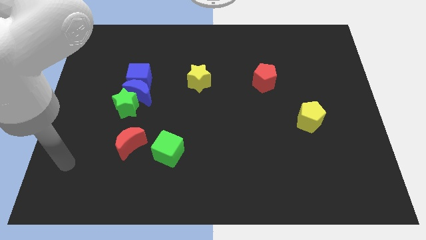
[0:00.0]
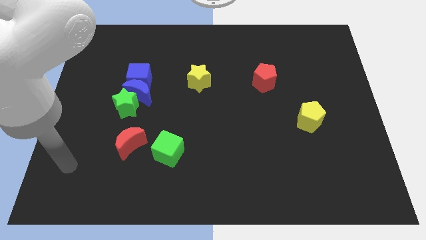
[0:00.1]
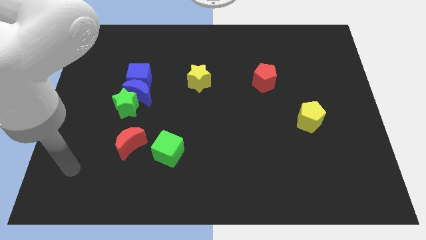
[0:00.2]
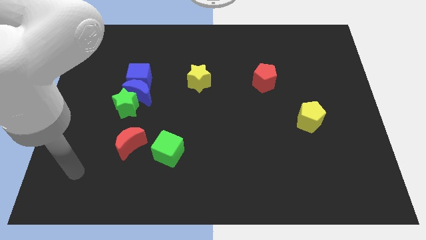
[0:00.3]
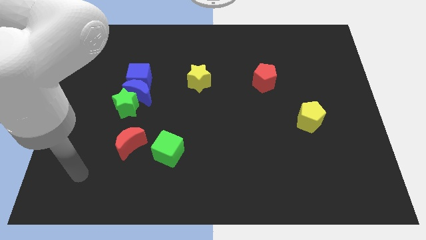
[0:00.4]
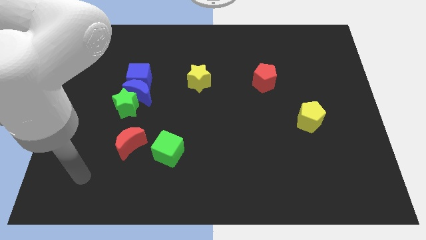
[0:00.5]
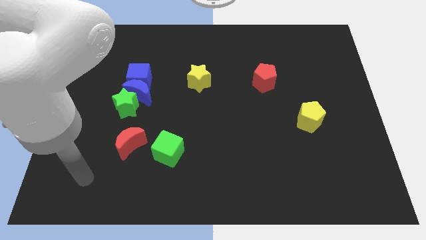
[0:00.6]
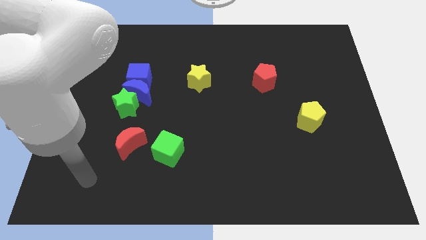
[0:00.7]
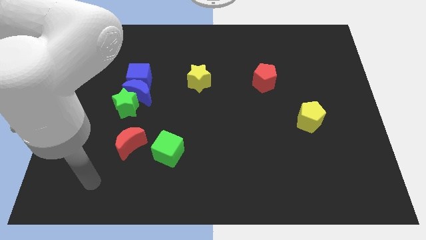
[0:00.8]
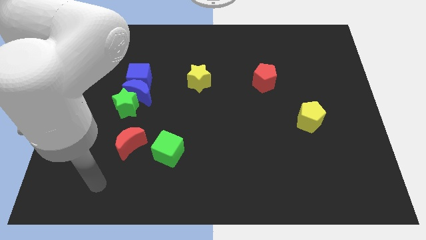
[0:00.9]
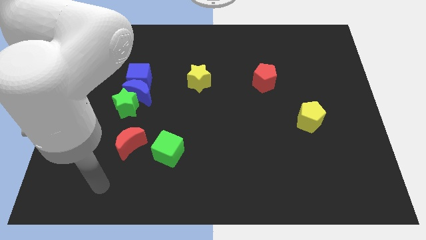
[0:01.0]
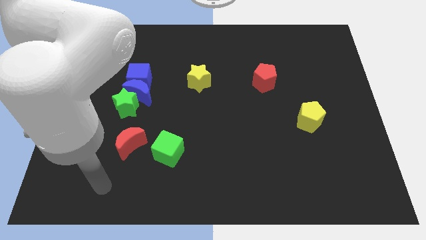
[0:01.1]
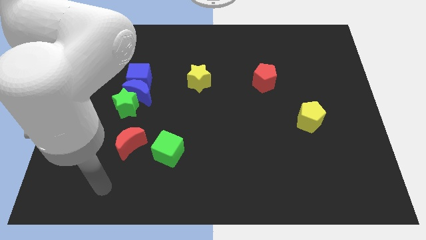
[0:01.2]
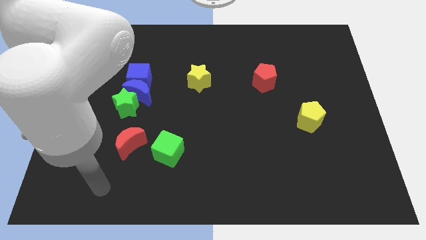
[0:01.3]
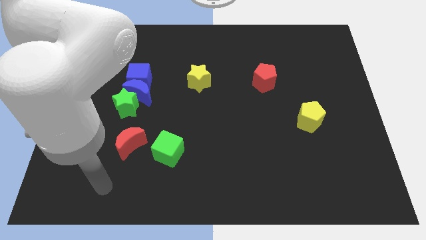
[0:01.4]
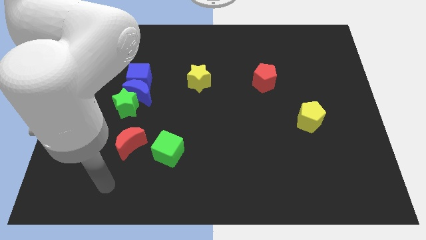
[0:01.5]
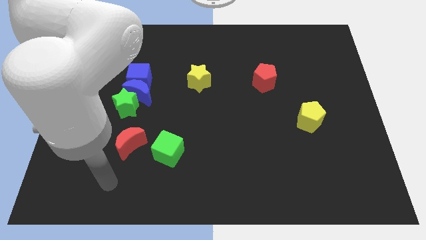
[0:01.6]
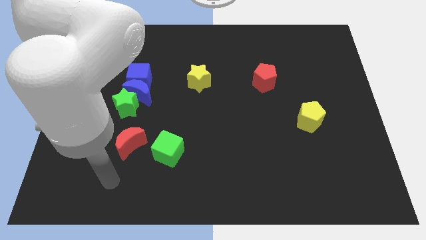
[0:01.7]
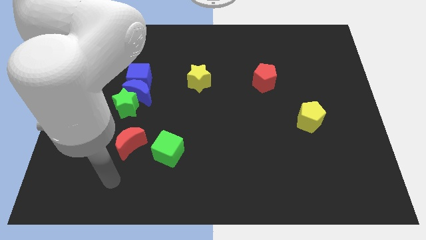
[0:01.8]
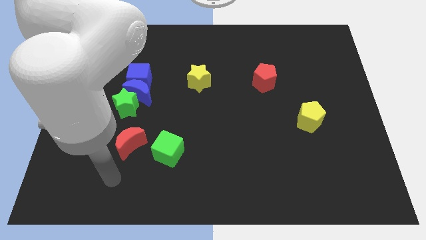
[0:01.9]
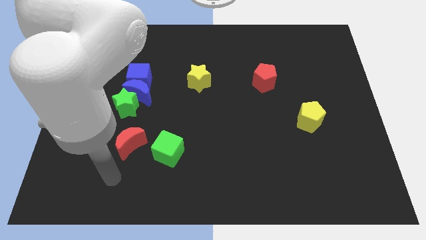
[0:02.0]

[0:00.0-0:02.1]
place the arm below the red moon

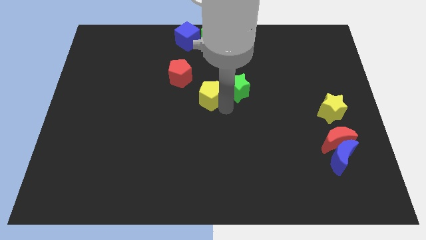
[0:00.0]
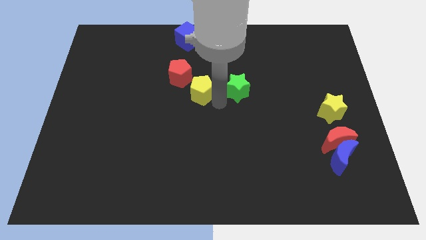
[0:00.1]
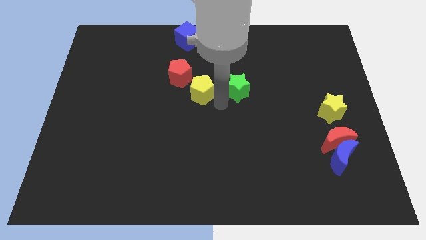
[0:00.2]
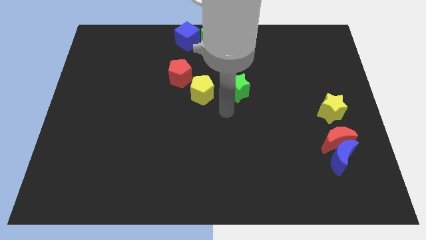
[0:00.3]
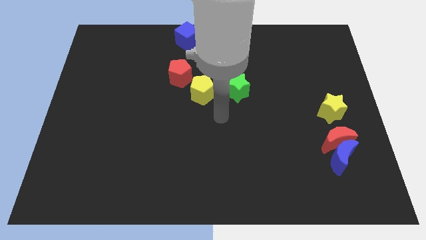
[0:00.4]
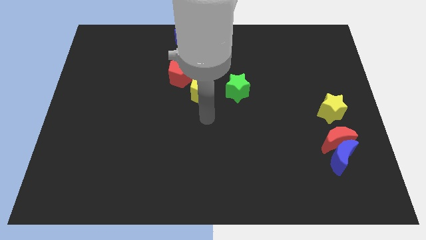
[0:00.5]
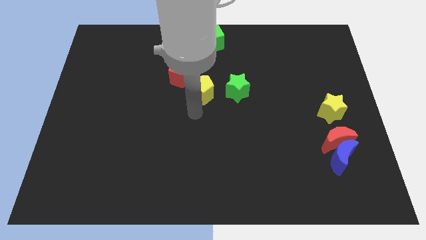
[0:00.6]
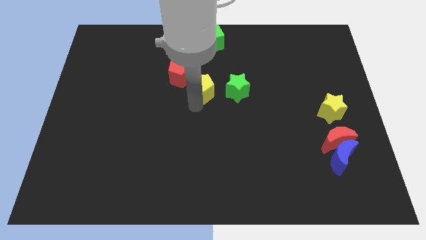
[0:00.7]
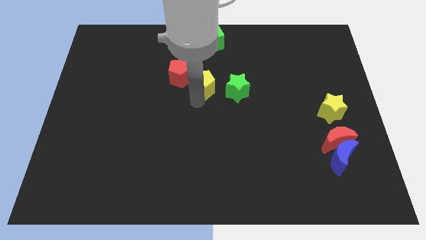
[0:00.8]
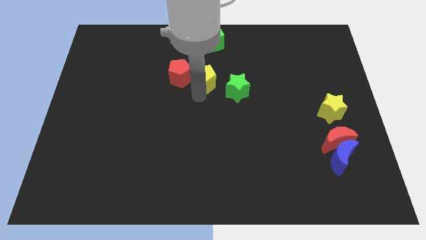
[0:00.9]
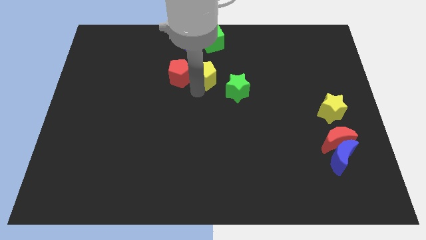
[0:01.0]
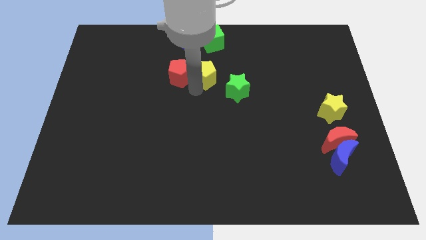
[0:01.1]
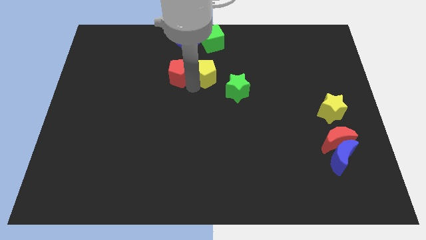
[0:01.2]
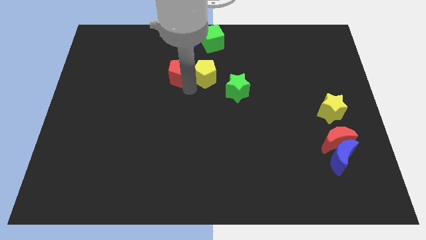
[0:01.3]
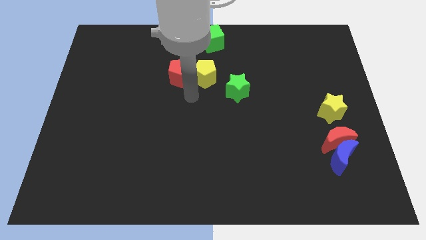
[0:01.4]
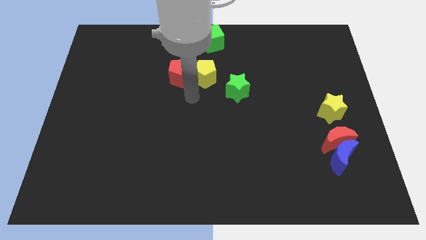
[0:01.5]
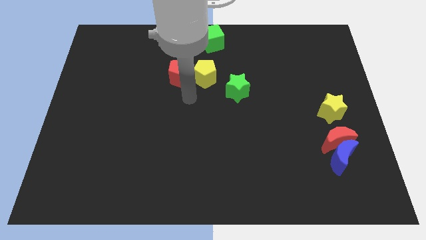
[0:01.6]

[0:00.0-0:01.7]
push the yellow pontagon to the right of red pentagon

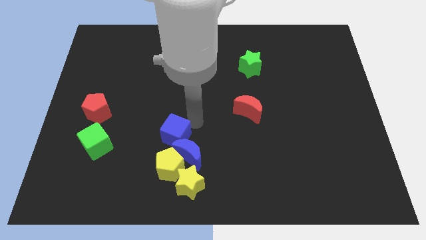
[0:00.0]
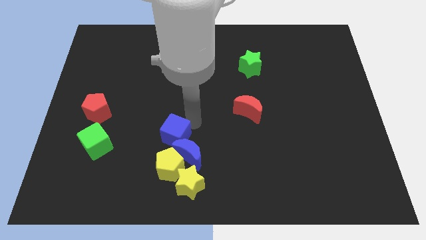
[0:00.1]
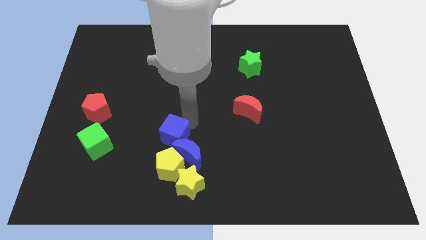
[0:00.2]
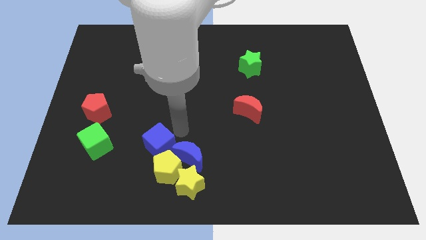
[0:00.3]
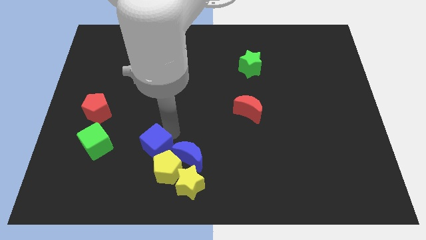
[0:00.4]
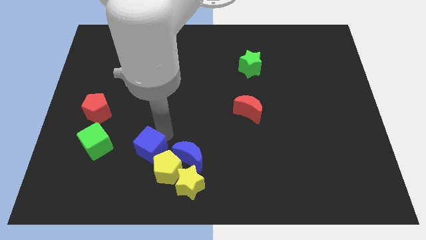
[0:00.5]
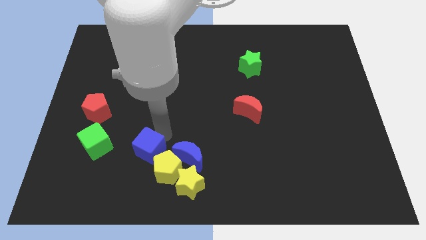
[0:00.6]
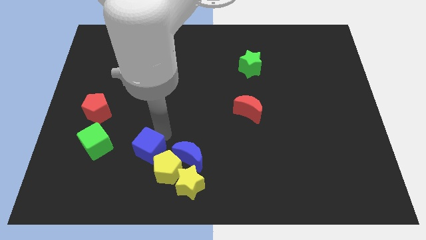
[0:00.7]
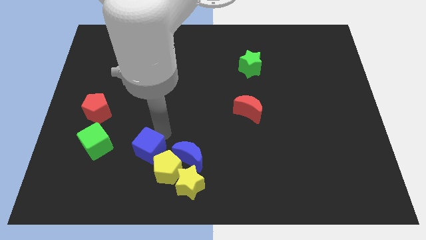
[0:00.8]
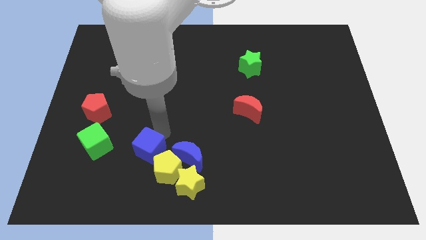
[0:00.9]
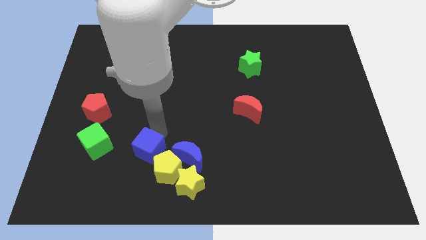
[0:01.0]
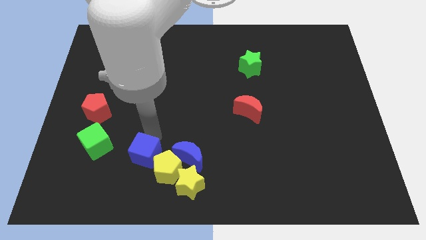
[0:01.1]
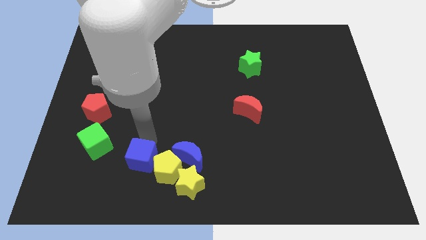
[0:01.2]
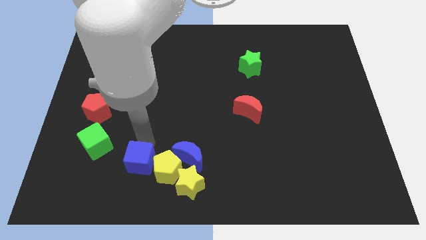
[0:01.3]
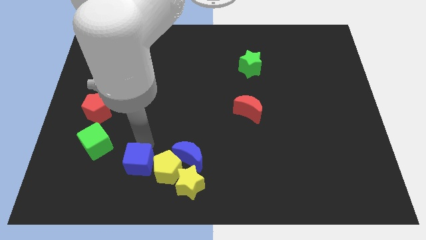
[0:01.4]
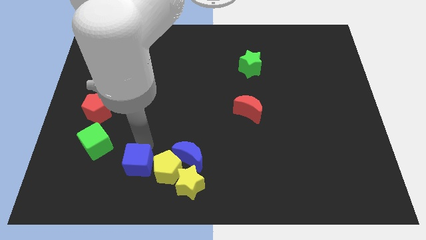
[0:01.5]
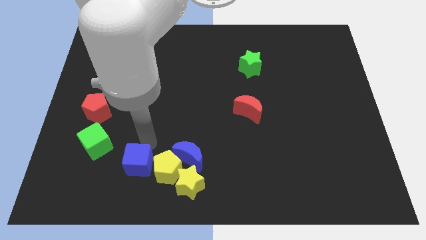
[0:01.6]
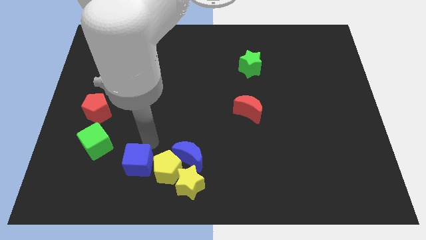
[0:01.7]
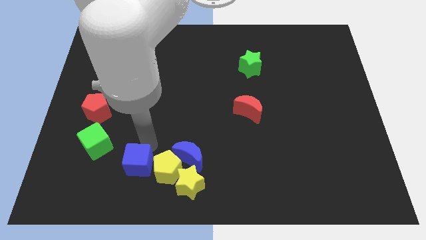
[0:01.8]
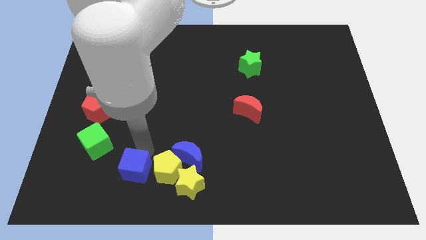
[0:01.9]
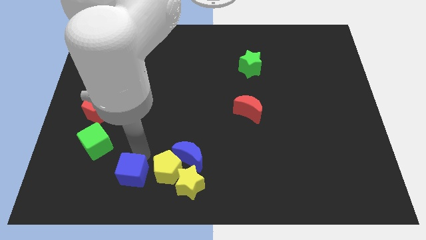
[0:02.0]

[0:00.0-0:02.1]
place the blue cube to the left side of the yellow pentagon

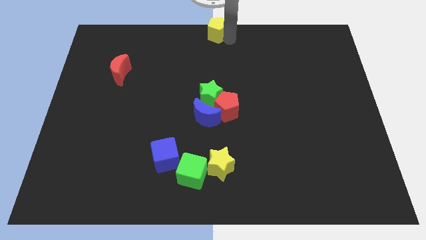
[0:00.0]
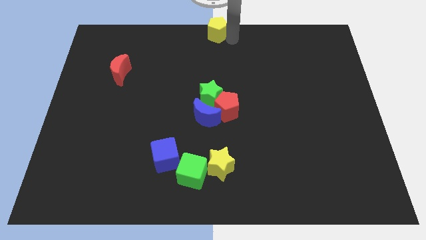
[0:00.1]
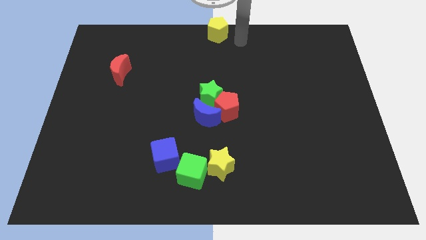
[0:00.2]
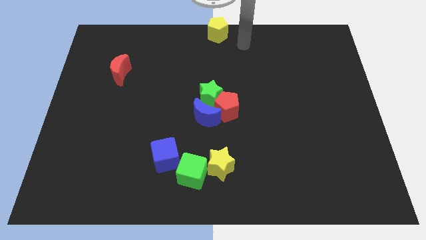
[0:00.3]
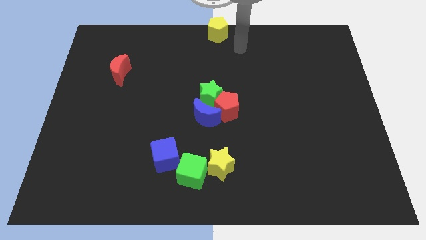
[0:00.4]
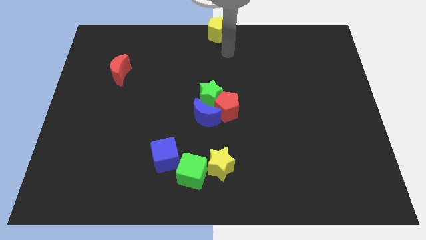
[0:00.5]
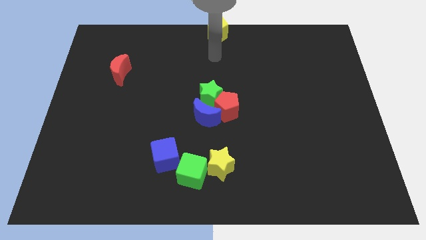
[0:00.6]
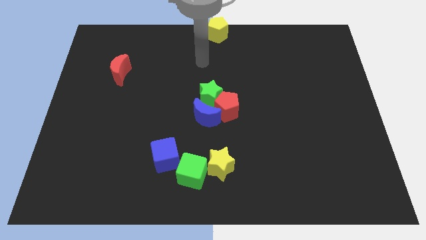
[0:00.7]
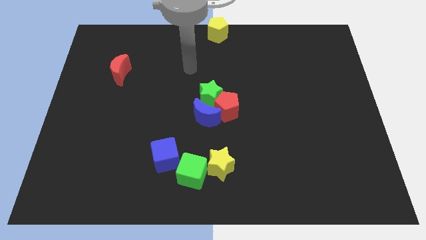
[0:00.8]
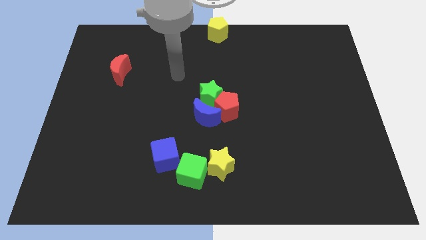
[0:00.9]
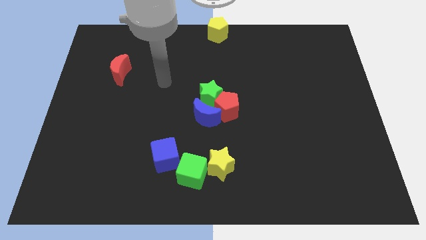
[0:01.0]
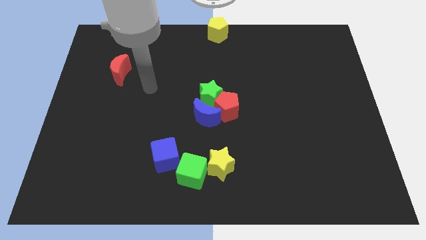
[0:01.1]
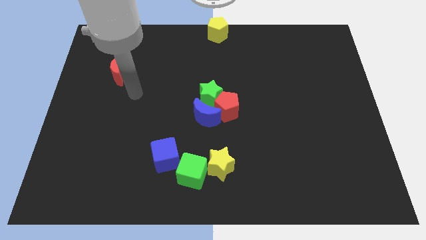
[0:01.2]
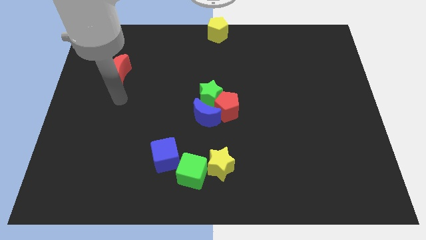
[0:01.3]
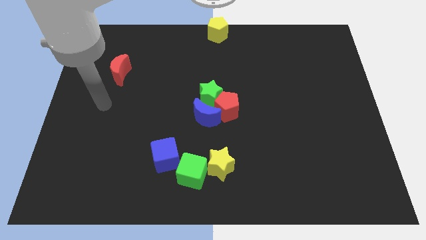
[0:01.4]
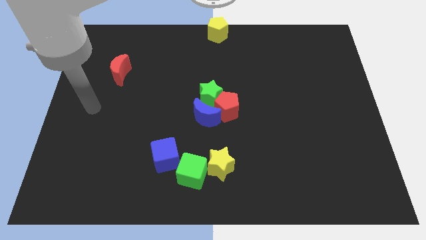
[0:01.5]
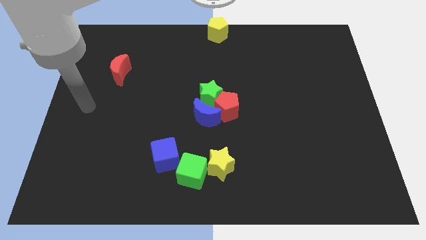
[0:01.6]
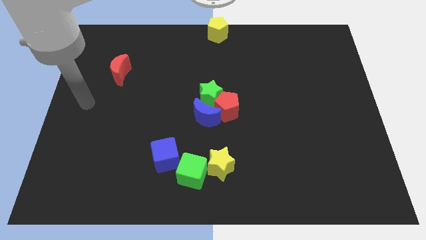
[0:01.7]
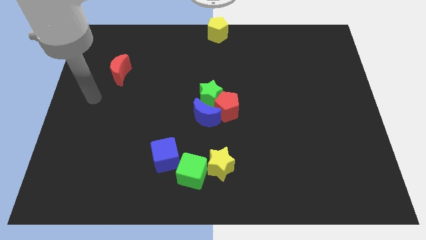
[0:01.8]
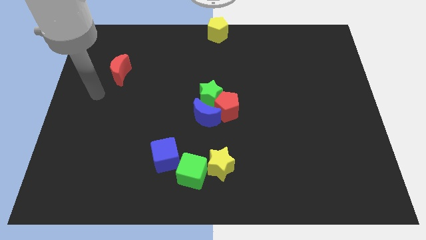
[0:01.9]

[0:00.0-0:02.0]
move your arm away from the yellow pentagon

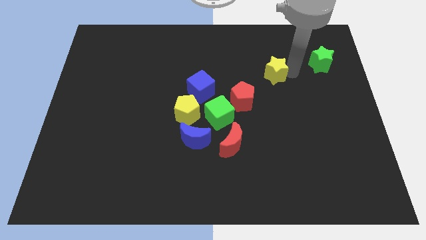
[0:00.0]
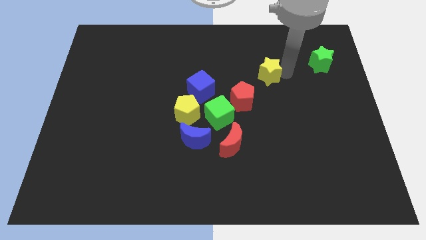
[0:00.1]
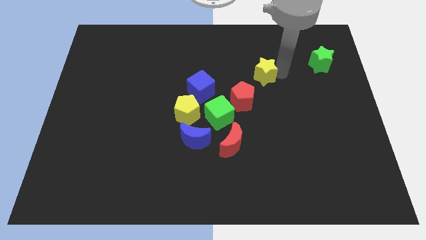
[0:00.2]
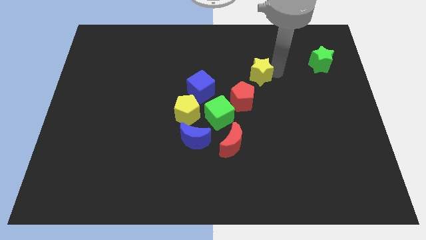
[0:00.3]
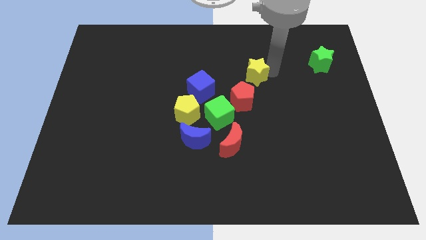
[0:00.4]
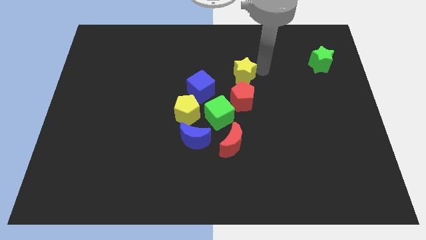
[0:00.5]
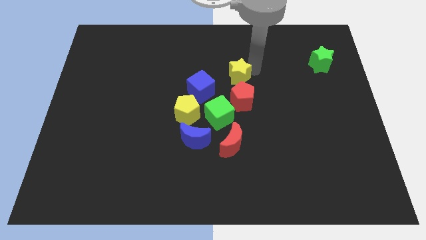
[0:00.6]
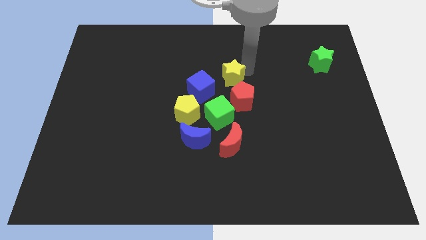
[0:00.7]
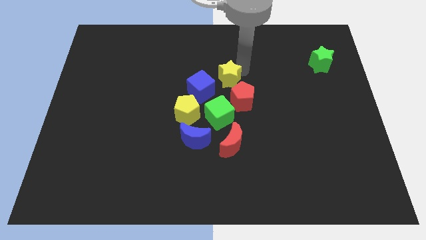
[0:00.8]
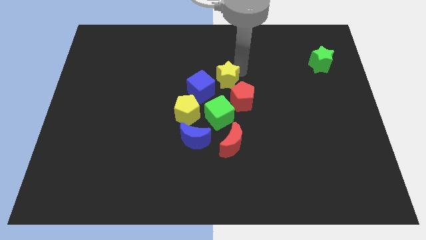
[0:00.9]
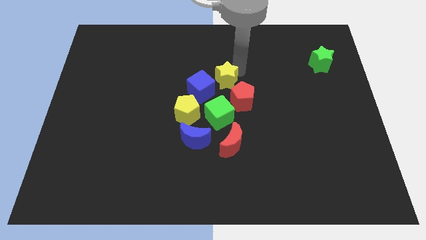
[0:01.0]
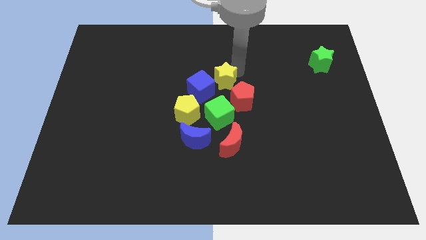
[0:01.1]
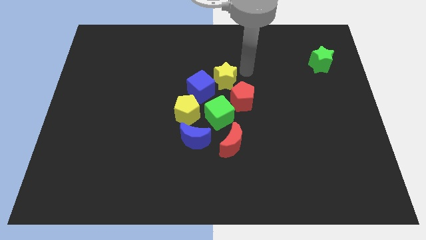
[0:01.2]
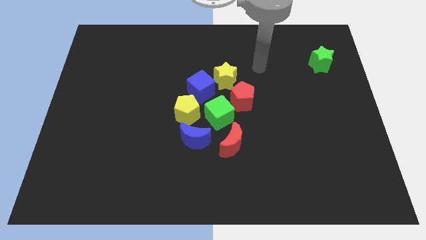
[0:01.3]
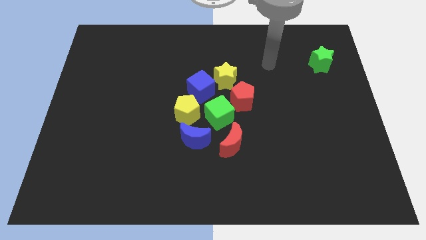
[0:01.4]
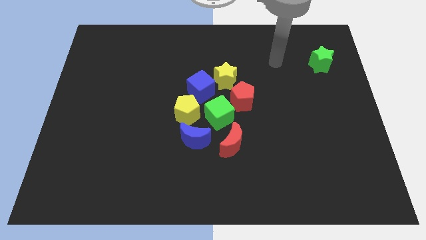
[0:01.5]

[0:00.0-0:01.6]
push the yellow star top left to the red pentagon
